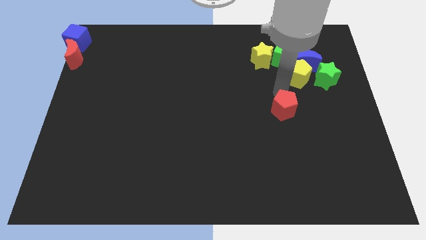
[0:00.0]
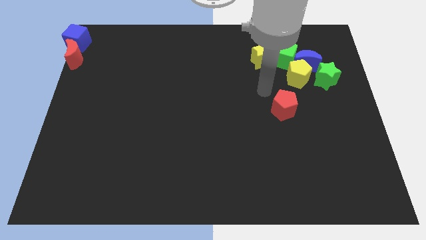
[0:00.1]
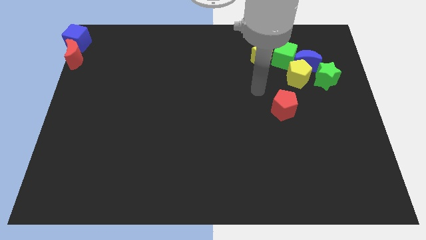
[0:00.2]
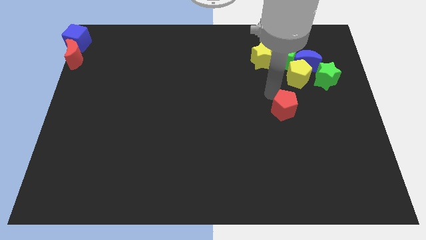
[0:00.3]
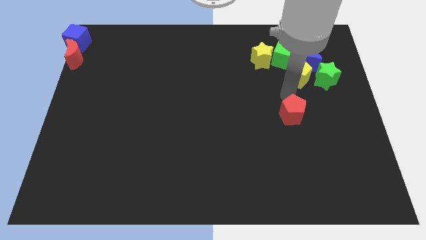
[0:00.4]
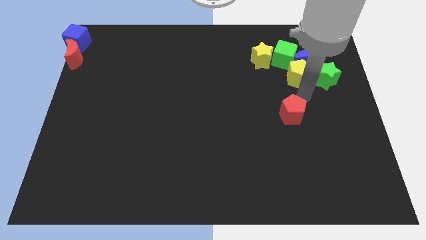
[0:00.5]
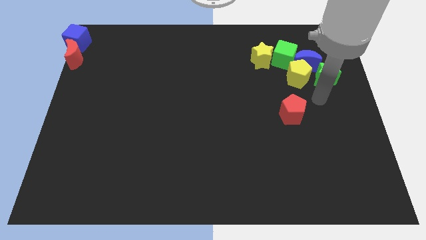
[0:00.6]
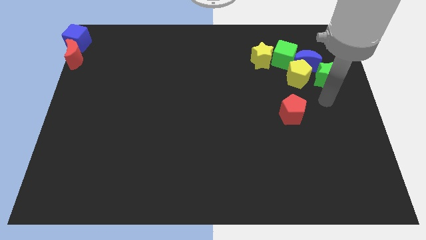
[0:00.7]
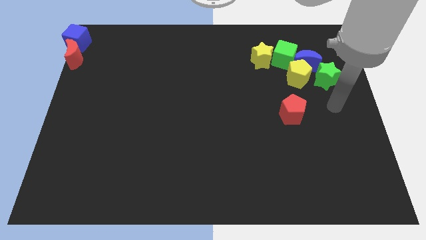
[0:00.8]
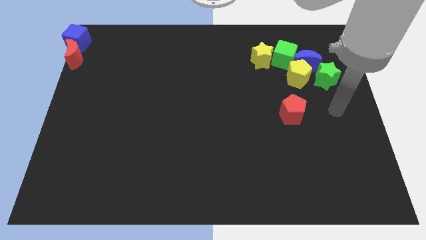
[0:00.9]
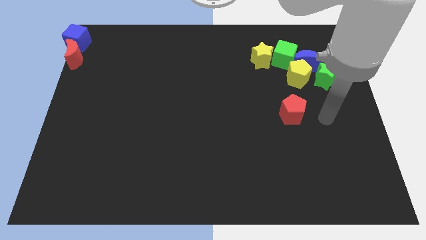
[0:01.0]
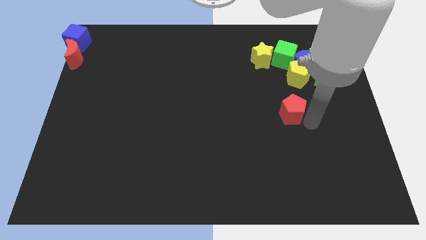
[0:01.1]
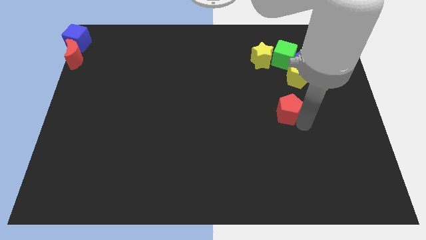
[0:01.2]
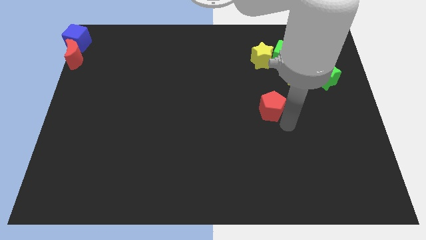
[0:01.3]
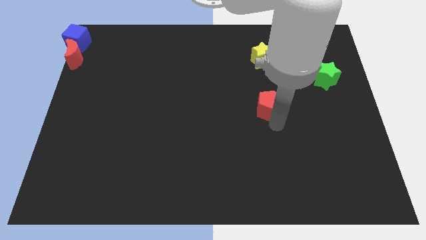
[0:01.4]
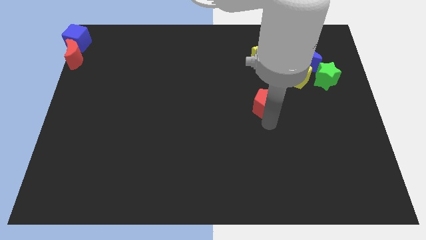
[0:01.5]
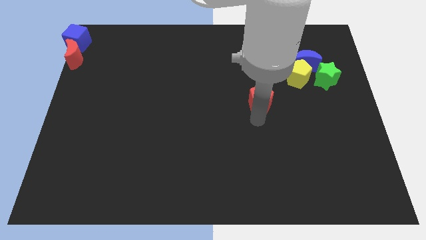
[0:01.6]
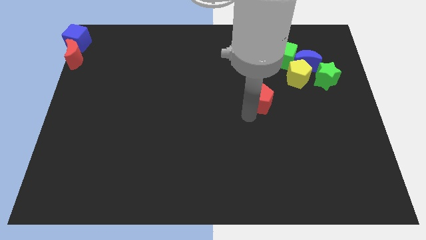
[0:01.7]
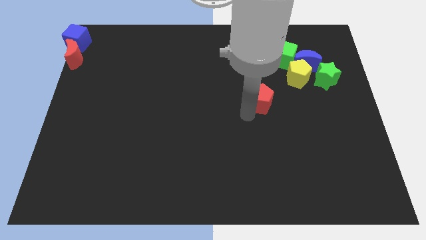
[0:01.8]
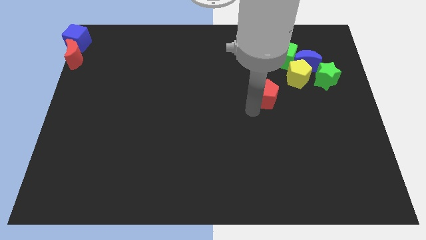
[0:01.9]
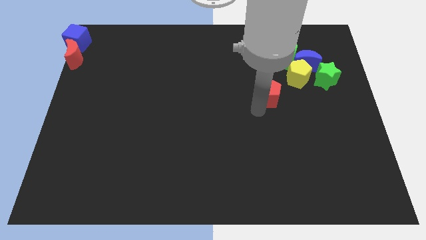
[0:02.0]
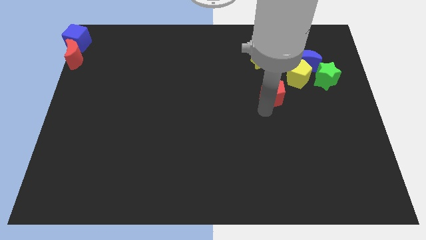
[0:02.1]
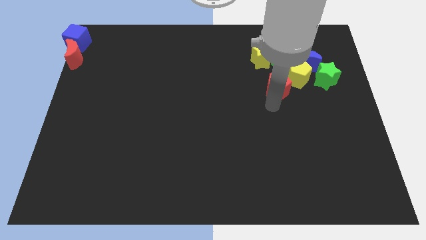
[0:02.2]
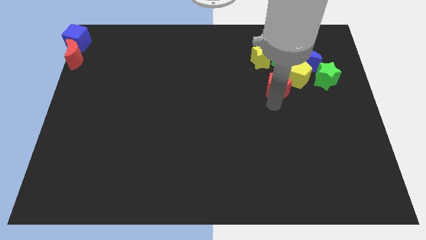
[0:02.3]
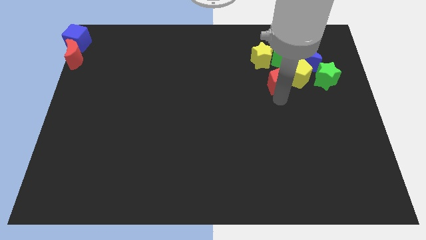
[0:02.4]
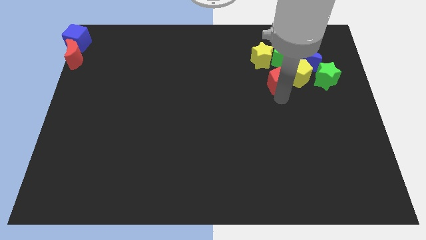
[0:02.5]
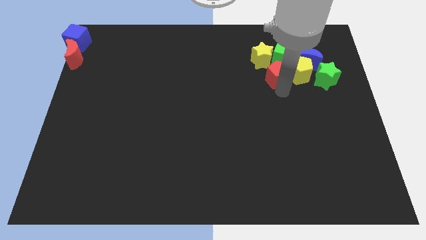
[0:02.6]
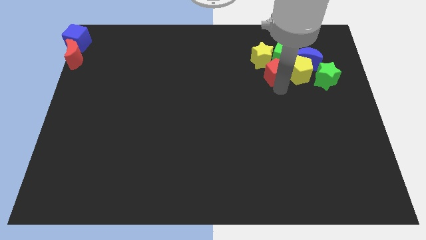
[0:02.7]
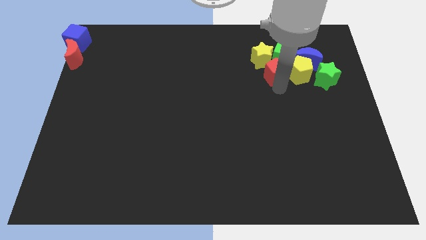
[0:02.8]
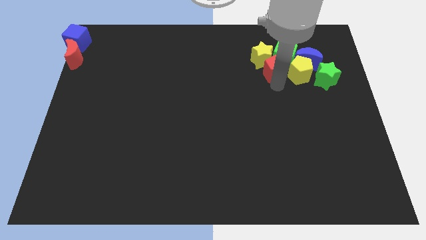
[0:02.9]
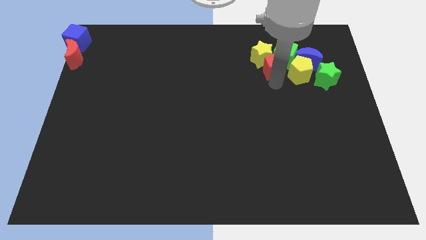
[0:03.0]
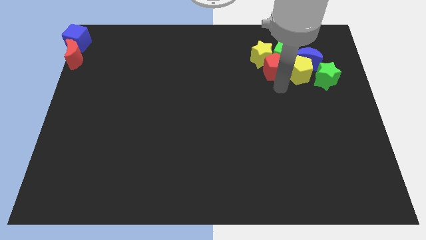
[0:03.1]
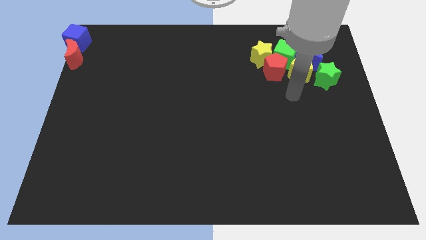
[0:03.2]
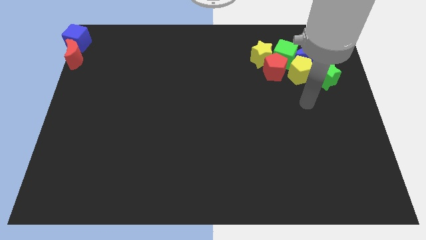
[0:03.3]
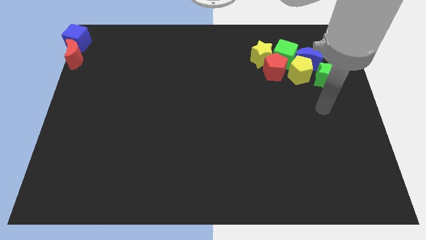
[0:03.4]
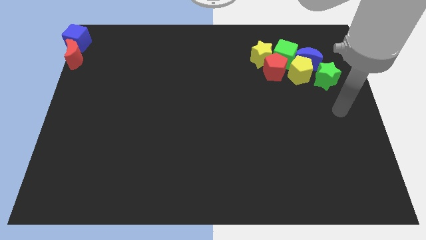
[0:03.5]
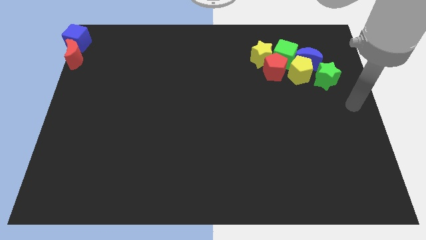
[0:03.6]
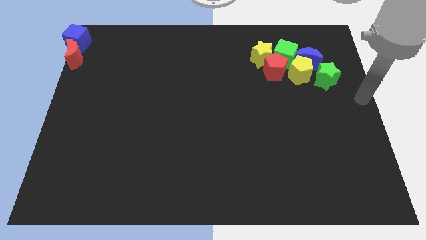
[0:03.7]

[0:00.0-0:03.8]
push the red pentagon into the group of blocks

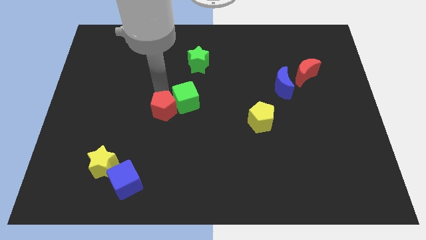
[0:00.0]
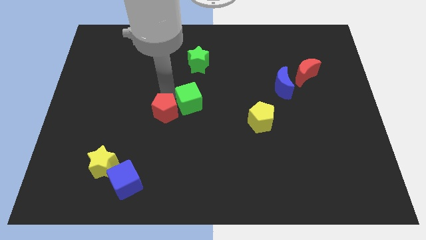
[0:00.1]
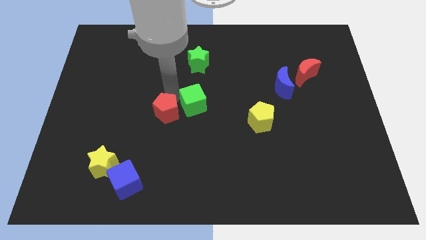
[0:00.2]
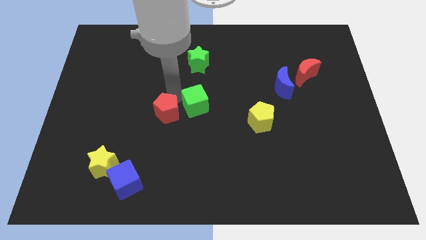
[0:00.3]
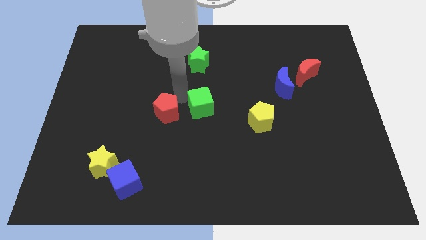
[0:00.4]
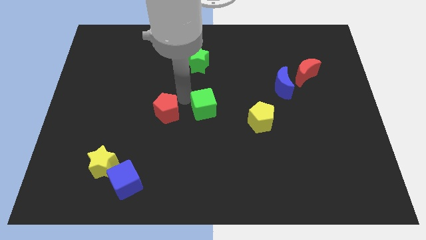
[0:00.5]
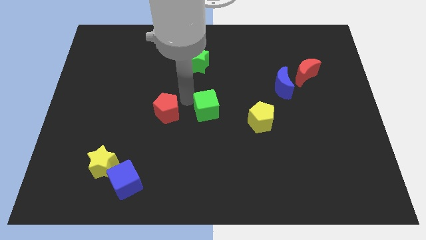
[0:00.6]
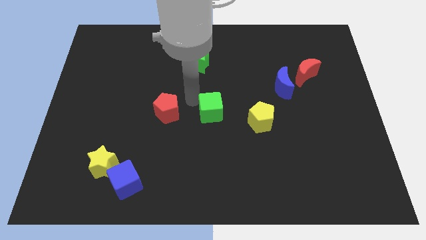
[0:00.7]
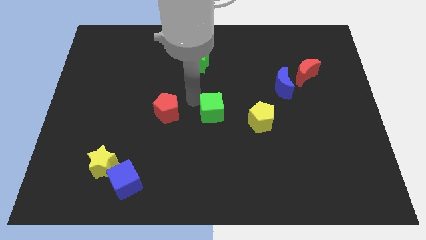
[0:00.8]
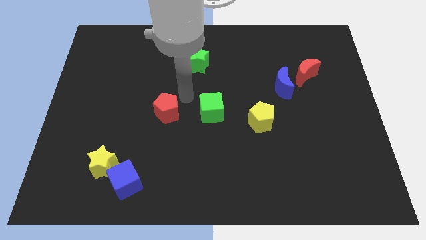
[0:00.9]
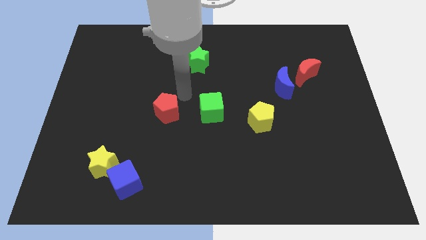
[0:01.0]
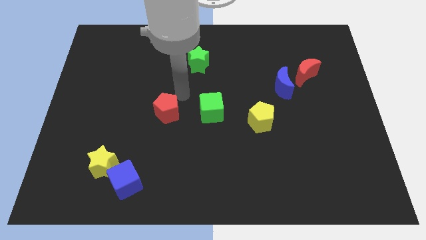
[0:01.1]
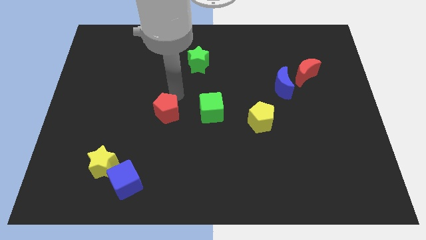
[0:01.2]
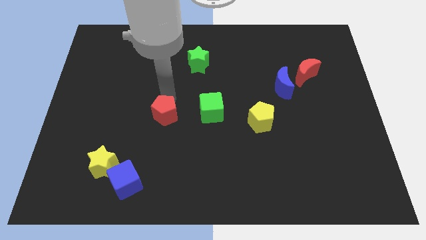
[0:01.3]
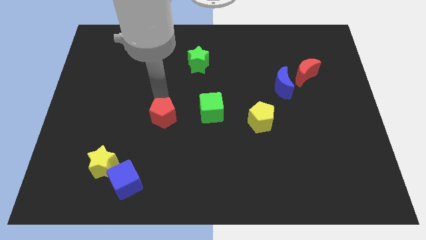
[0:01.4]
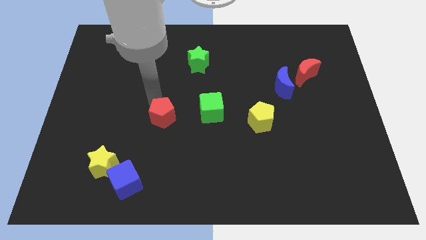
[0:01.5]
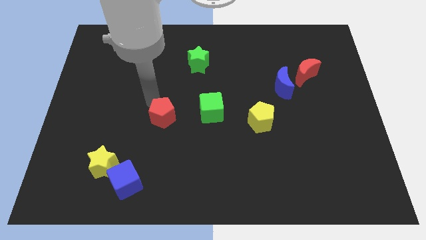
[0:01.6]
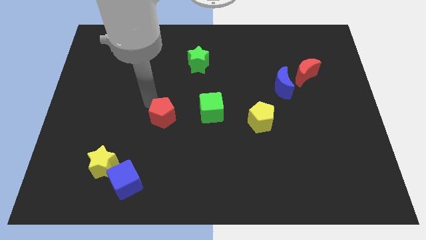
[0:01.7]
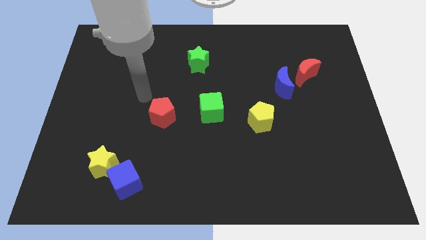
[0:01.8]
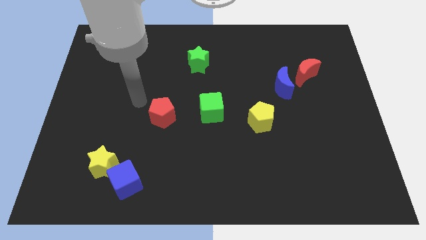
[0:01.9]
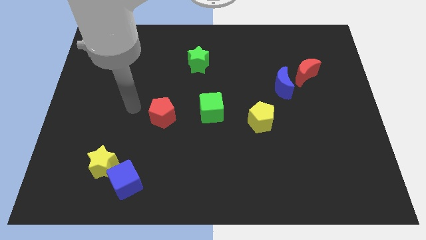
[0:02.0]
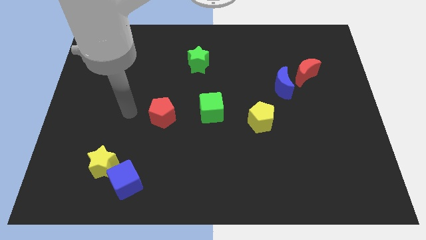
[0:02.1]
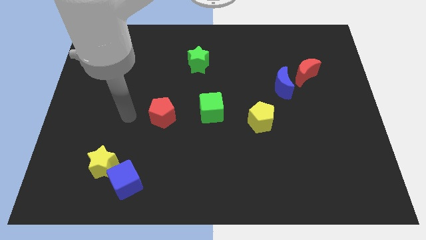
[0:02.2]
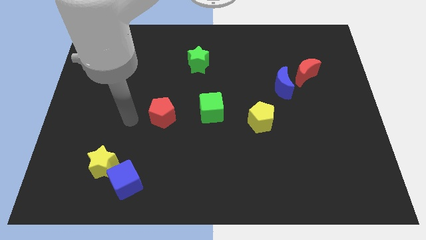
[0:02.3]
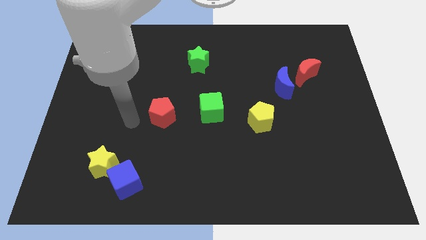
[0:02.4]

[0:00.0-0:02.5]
separate the red pentagon and the green cube

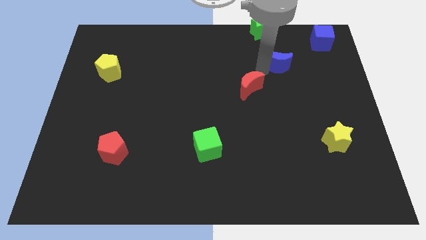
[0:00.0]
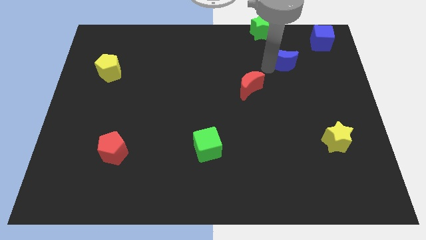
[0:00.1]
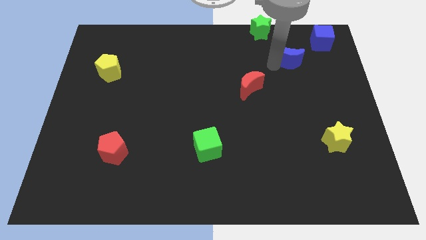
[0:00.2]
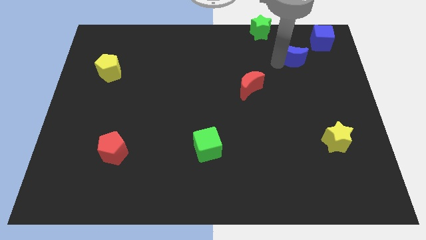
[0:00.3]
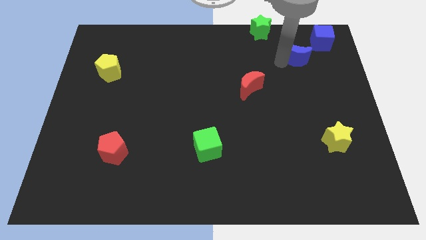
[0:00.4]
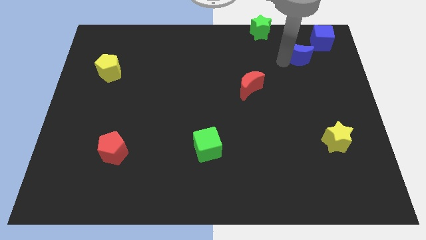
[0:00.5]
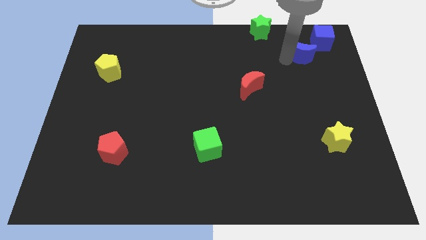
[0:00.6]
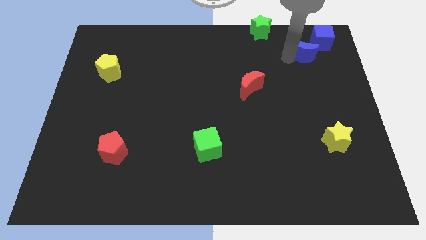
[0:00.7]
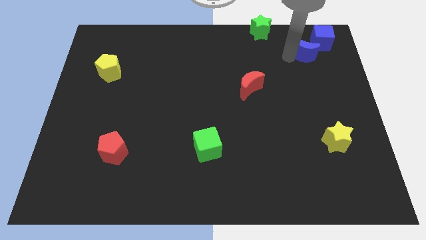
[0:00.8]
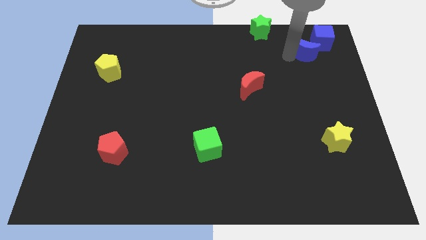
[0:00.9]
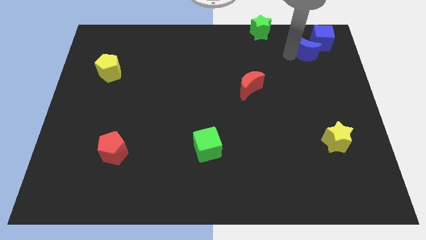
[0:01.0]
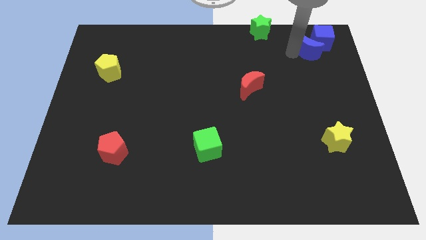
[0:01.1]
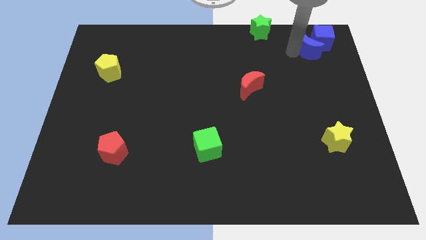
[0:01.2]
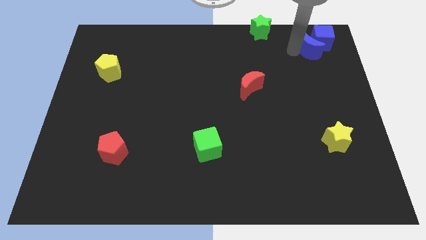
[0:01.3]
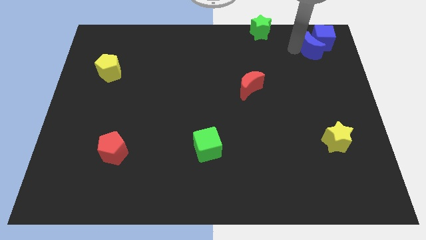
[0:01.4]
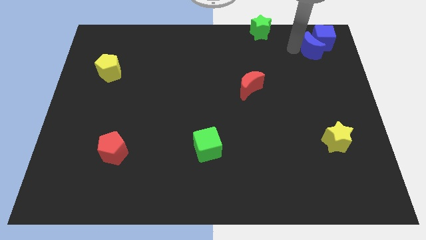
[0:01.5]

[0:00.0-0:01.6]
push the blue crescent into the blue cube

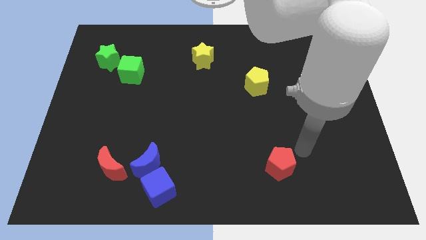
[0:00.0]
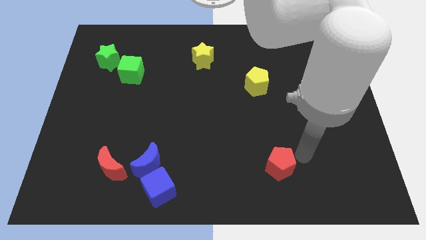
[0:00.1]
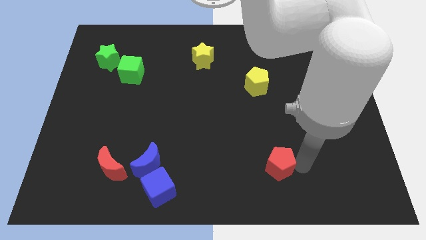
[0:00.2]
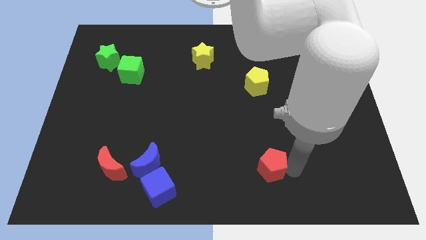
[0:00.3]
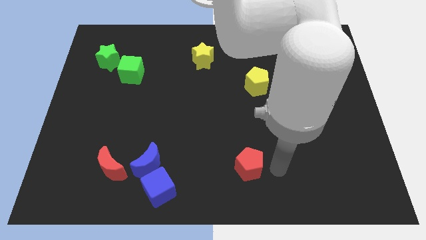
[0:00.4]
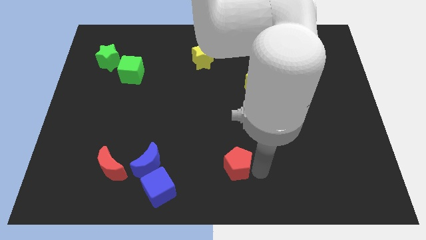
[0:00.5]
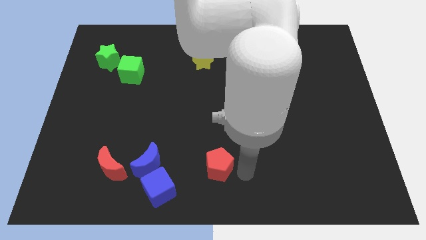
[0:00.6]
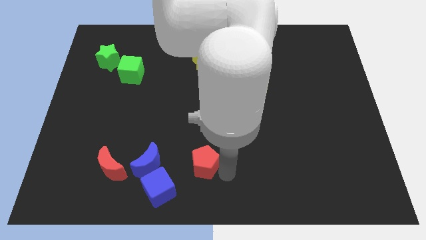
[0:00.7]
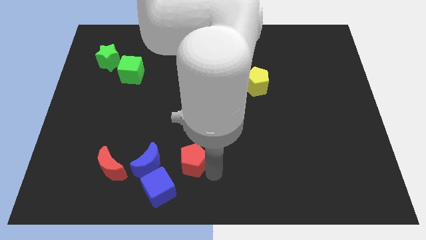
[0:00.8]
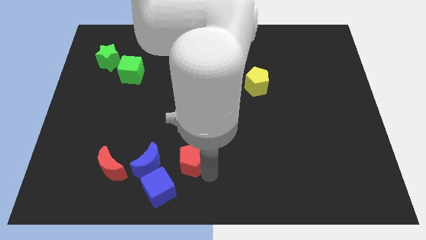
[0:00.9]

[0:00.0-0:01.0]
push the red pentagon into the blue crescent
